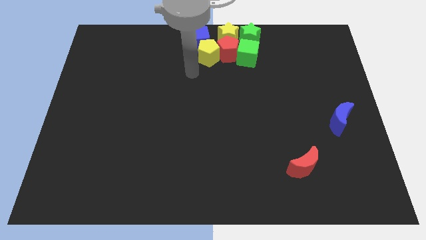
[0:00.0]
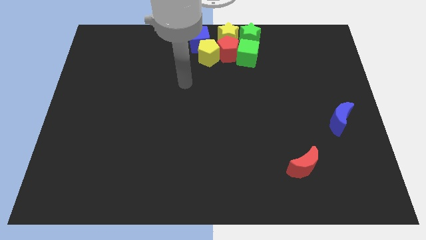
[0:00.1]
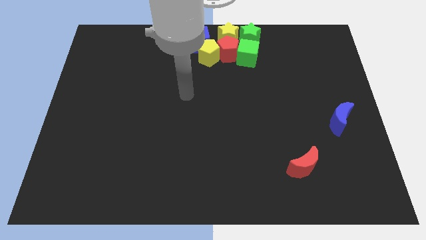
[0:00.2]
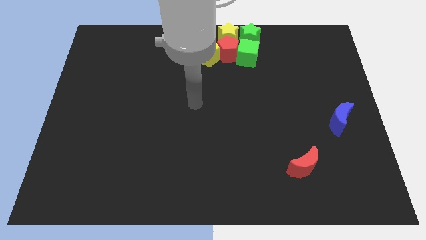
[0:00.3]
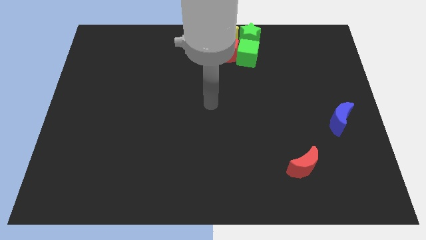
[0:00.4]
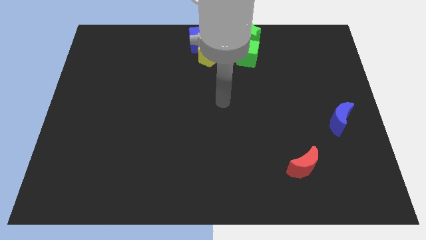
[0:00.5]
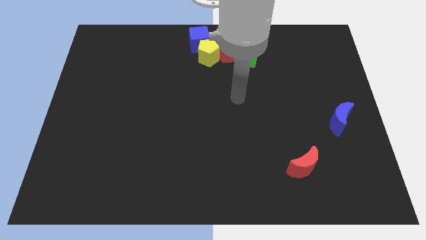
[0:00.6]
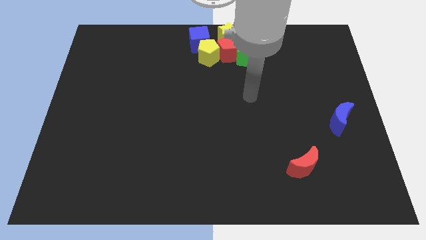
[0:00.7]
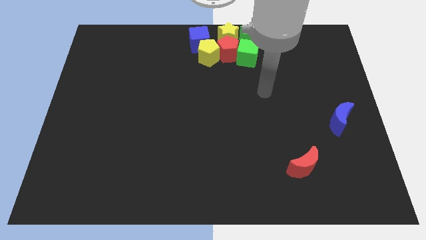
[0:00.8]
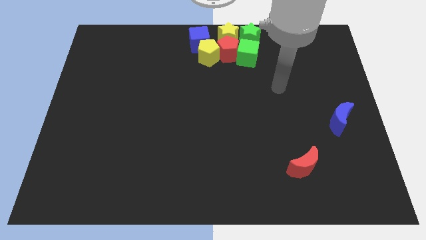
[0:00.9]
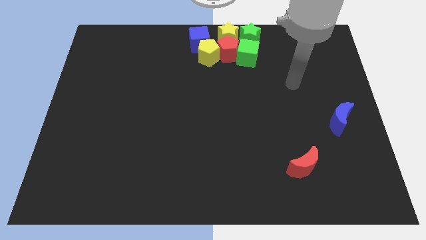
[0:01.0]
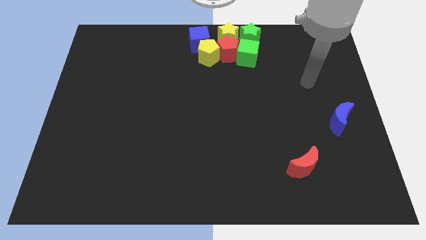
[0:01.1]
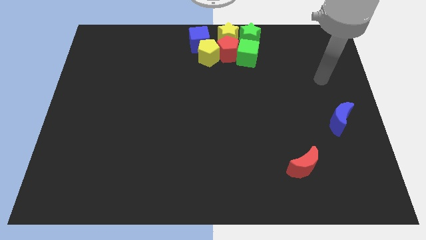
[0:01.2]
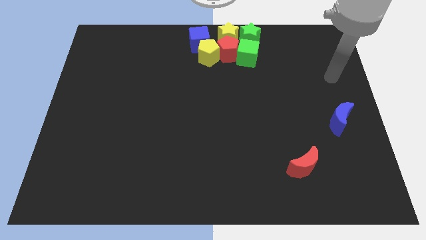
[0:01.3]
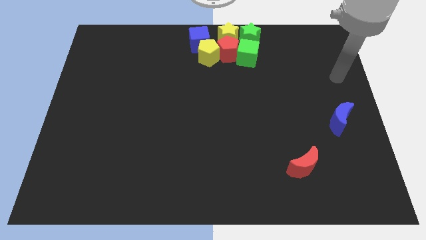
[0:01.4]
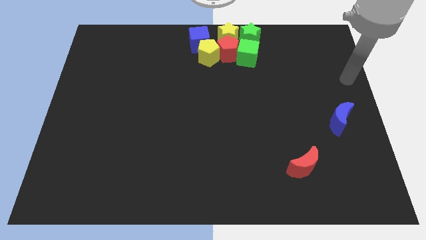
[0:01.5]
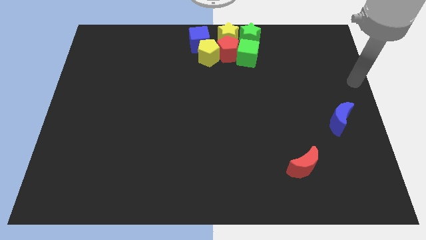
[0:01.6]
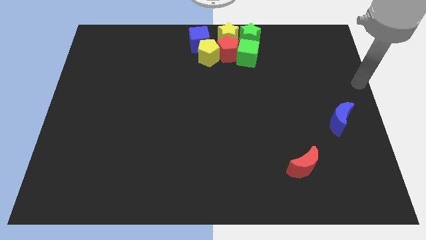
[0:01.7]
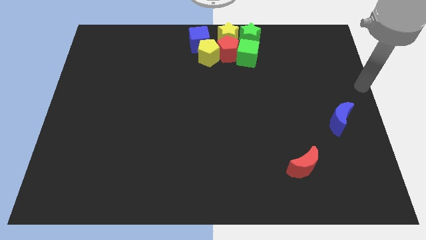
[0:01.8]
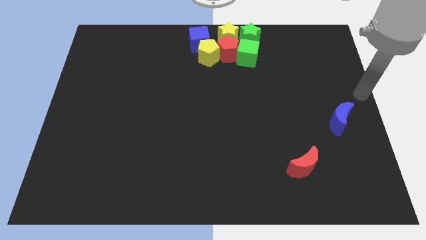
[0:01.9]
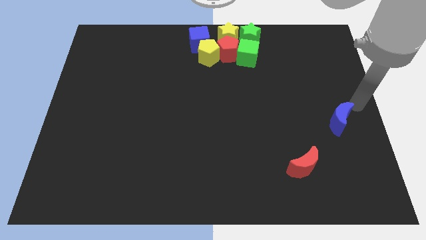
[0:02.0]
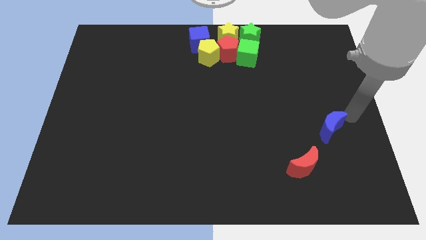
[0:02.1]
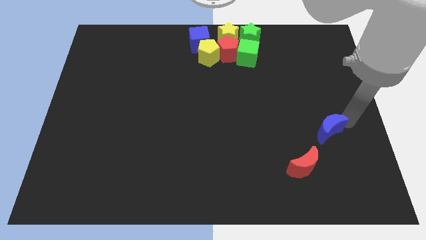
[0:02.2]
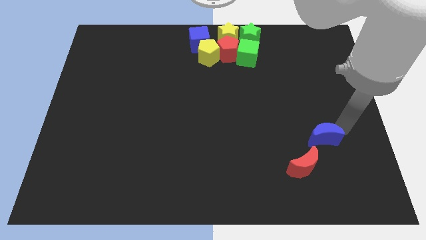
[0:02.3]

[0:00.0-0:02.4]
move your arm towards the blue moon

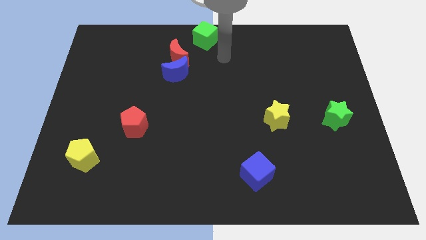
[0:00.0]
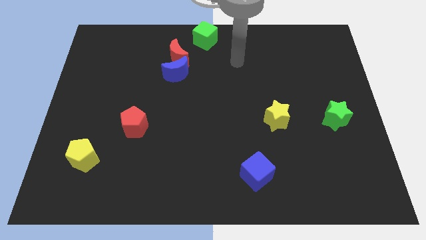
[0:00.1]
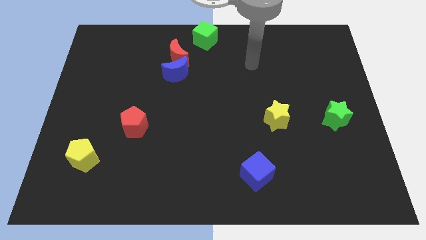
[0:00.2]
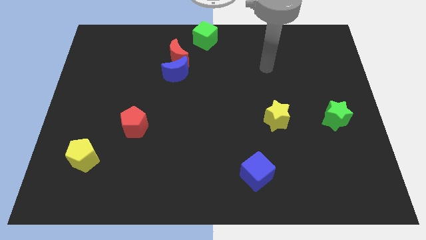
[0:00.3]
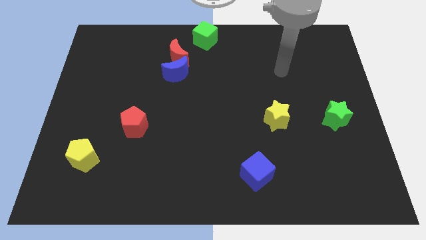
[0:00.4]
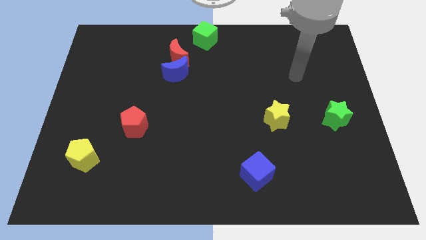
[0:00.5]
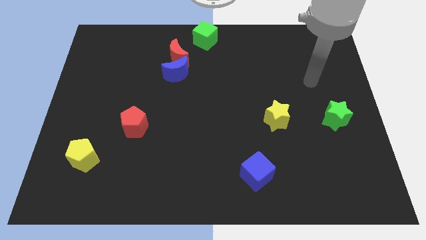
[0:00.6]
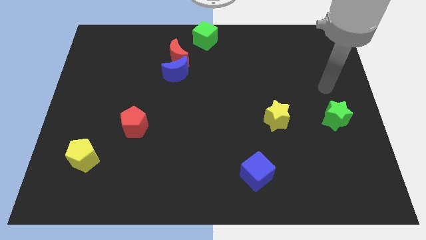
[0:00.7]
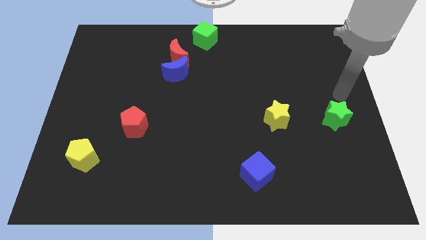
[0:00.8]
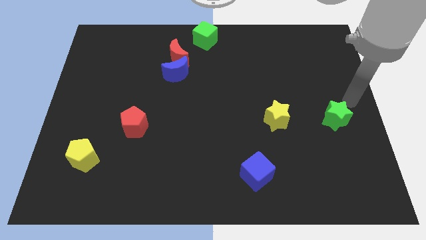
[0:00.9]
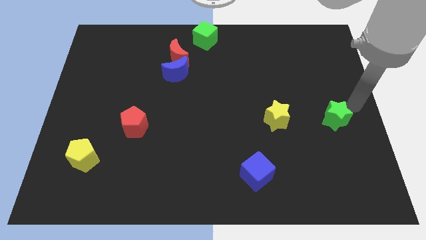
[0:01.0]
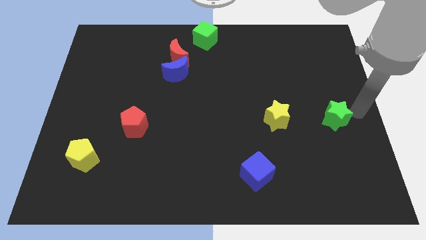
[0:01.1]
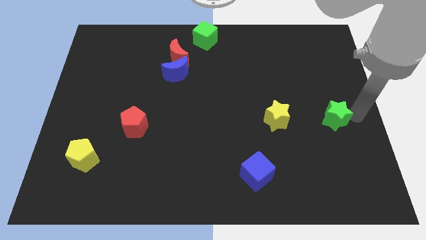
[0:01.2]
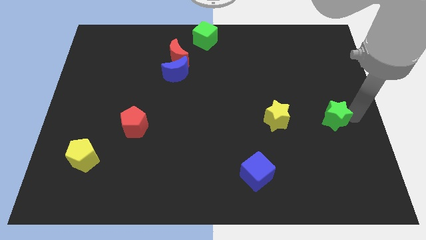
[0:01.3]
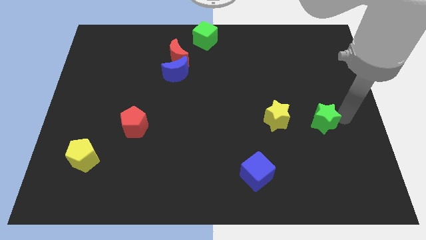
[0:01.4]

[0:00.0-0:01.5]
touch the right side of the green star

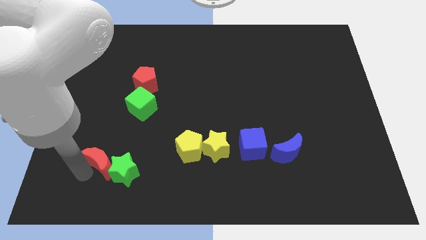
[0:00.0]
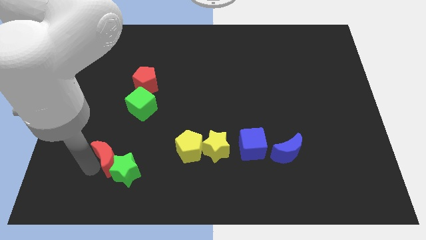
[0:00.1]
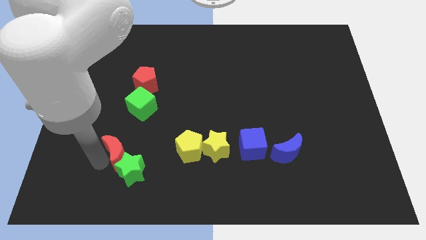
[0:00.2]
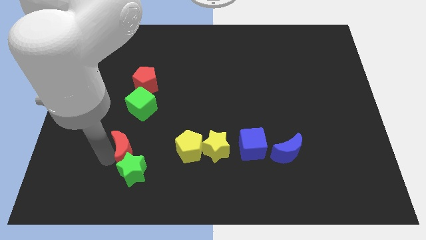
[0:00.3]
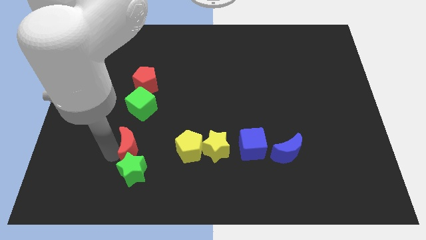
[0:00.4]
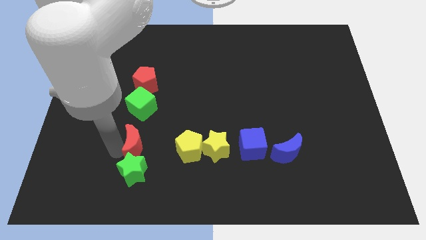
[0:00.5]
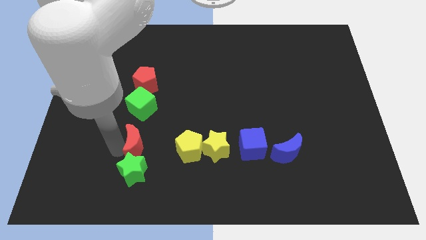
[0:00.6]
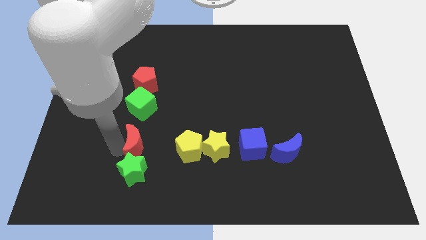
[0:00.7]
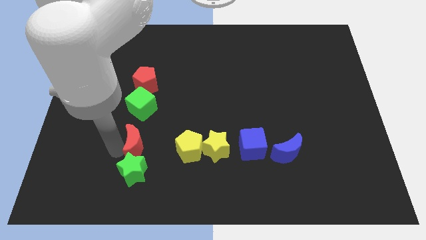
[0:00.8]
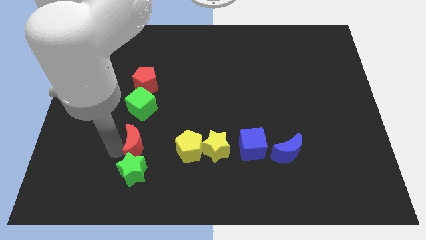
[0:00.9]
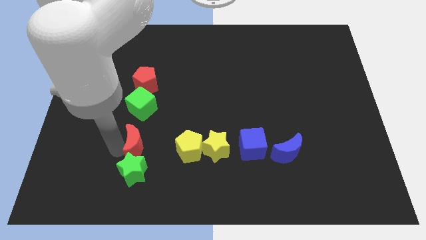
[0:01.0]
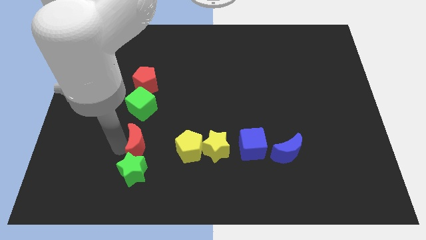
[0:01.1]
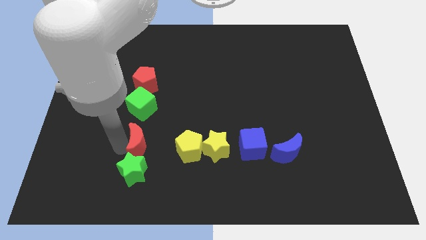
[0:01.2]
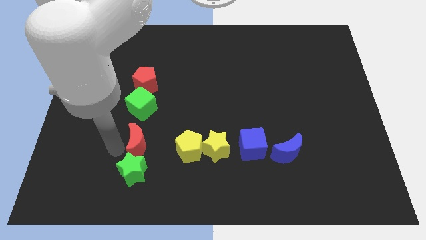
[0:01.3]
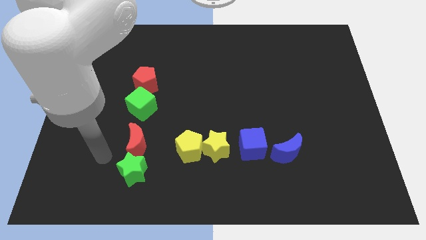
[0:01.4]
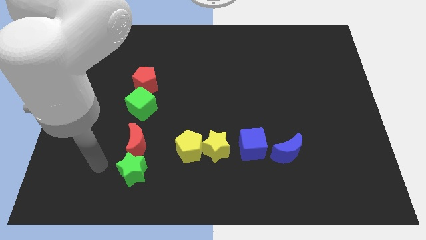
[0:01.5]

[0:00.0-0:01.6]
place the crescent in between the green cube and the green star

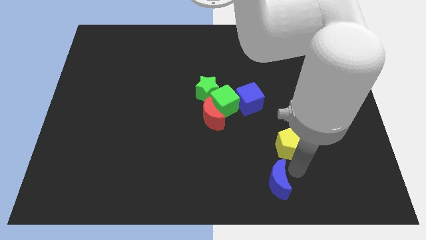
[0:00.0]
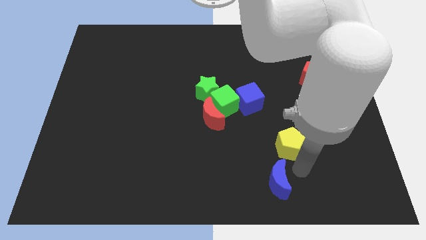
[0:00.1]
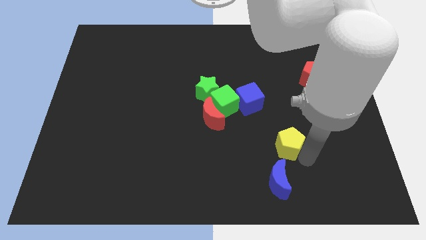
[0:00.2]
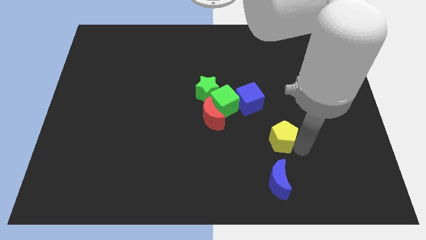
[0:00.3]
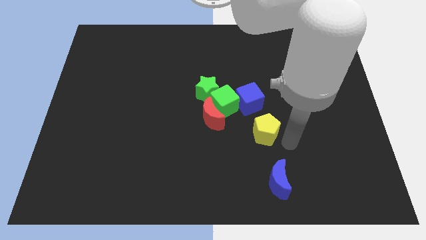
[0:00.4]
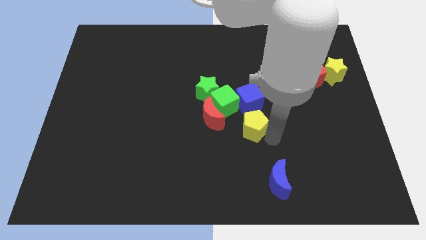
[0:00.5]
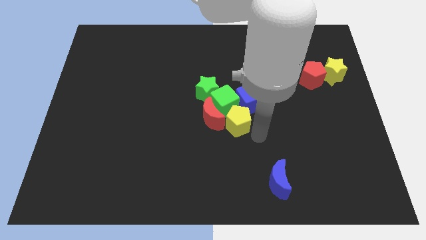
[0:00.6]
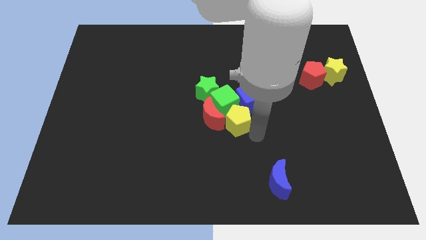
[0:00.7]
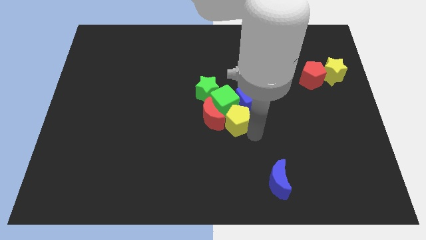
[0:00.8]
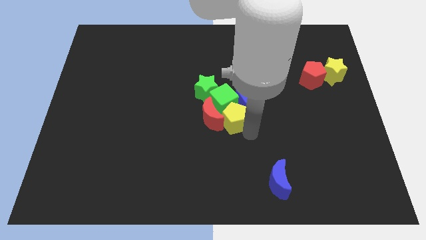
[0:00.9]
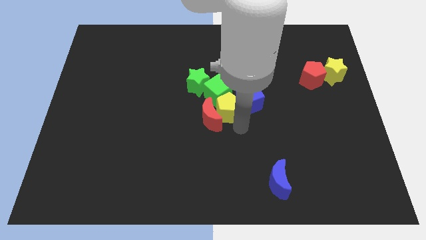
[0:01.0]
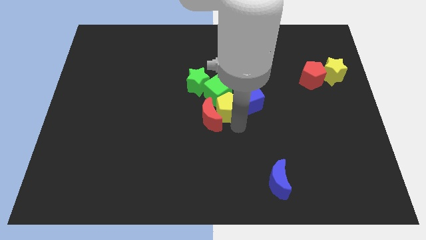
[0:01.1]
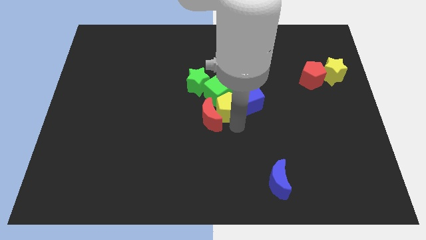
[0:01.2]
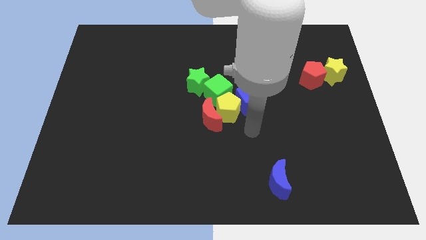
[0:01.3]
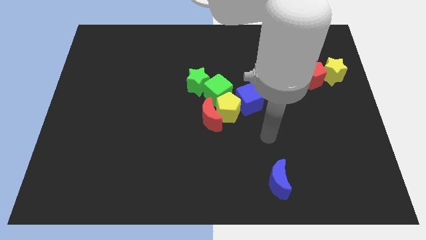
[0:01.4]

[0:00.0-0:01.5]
push the green star green cube with the yellow pentagon slightly towards the top center of the board

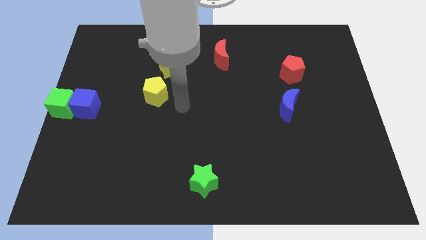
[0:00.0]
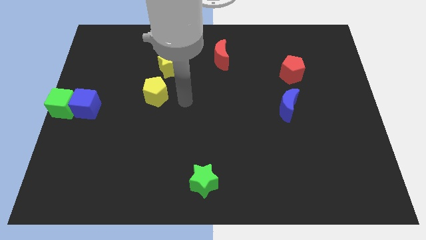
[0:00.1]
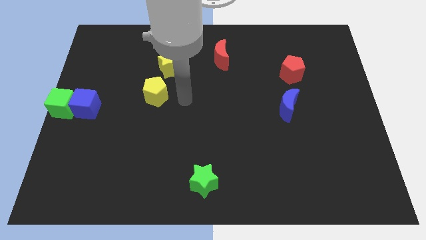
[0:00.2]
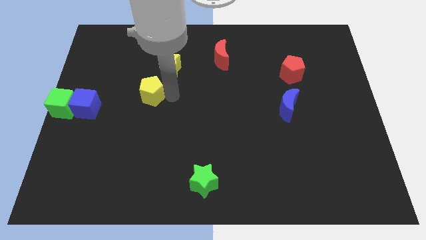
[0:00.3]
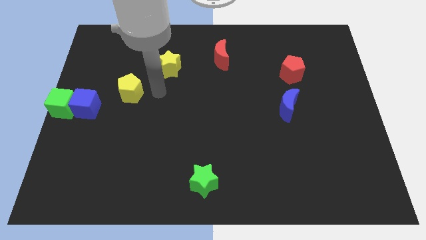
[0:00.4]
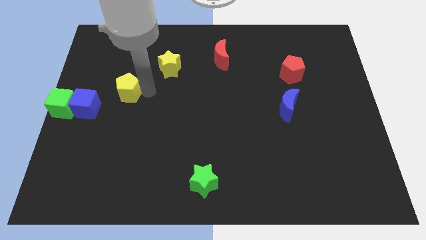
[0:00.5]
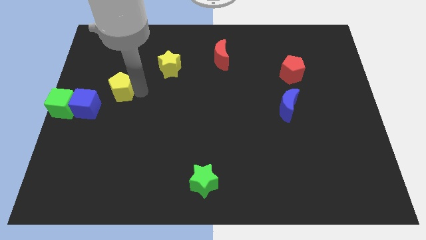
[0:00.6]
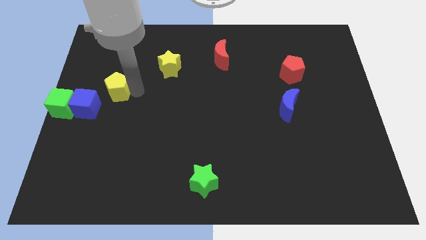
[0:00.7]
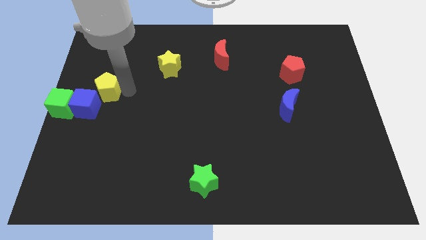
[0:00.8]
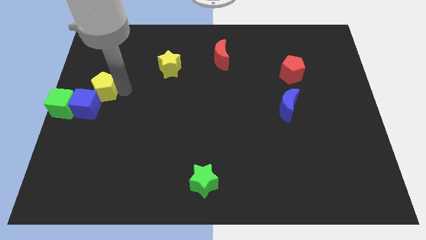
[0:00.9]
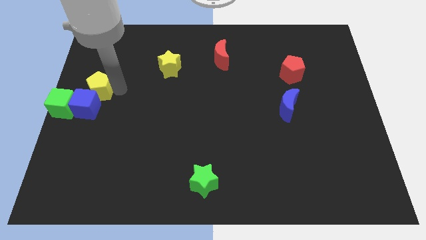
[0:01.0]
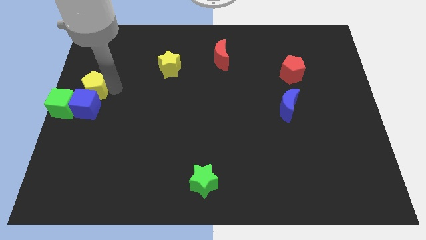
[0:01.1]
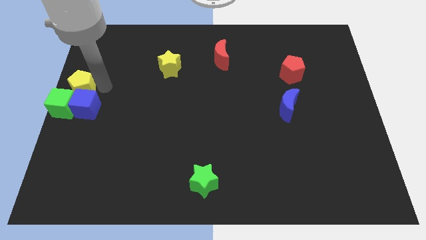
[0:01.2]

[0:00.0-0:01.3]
put the yellow pentagon above the blue cube

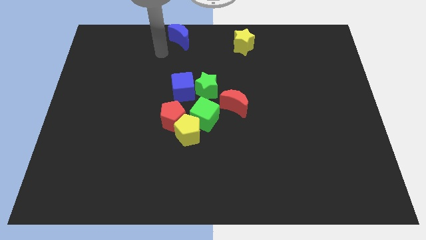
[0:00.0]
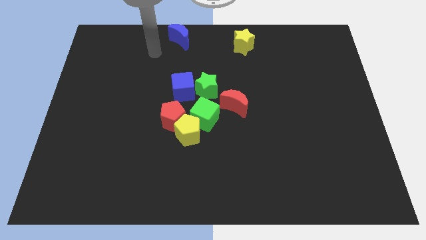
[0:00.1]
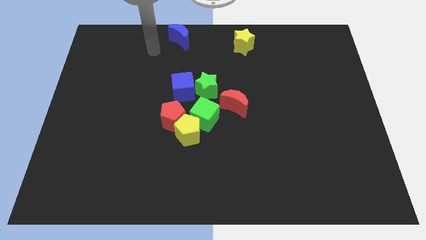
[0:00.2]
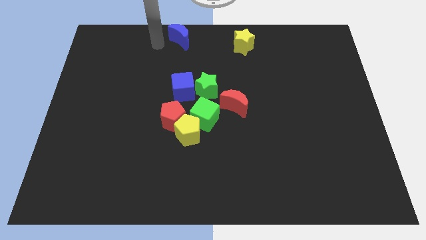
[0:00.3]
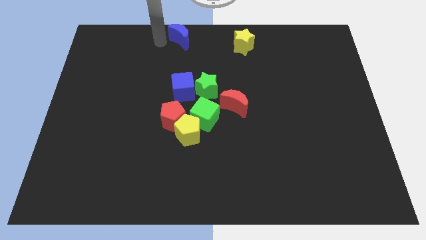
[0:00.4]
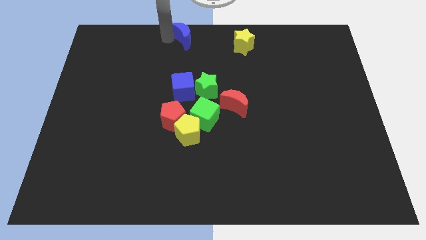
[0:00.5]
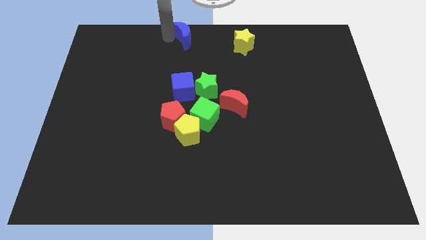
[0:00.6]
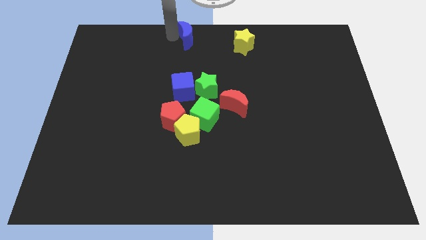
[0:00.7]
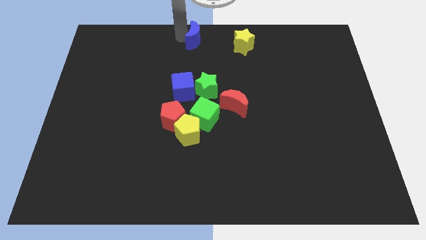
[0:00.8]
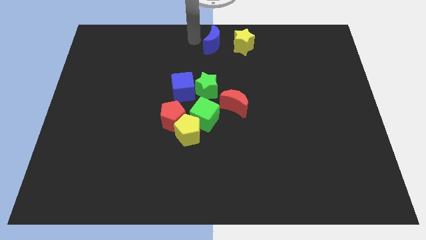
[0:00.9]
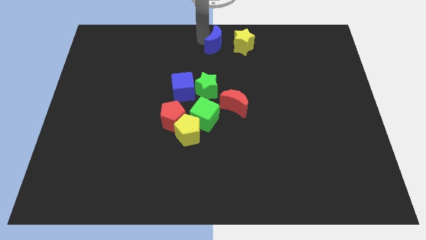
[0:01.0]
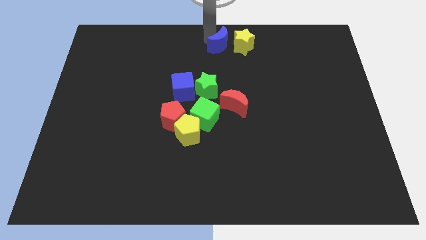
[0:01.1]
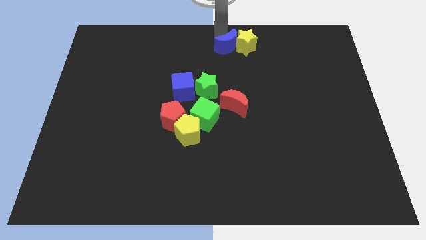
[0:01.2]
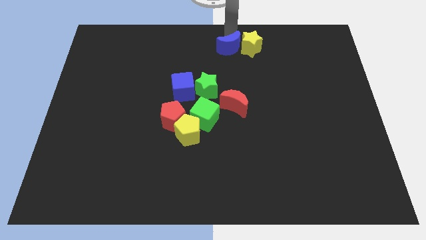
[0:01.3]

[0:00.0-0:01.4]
put the blue semicircle into the yellow star
